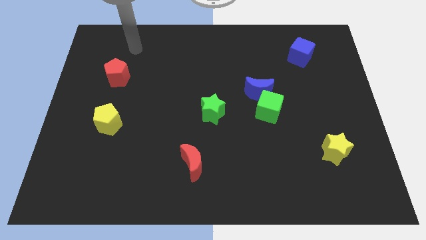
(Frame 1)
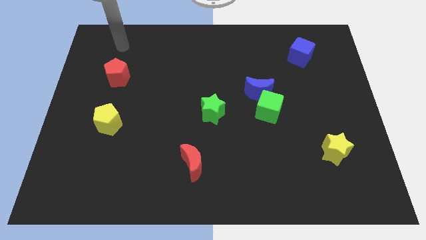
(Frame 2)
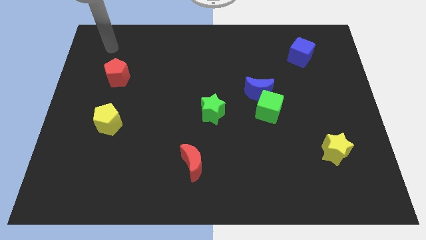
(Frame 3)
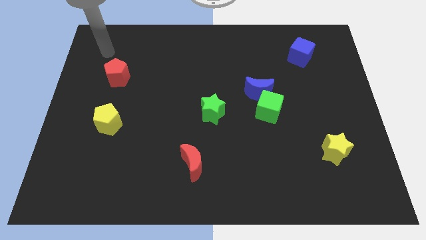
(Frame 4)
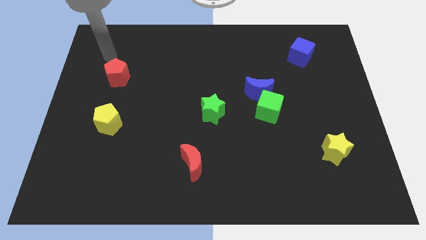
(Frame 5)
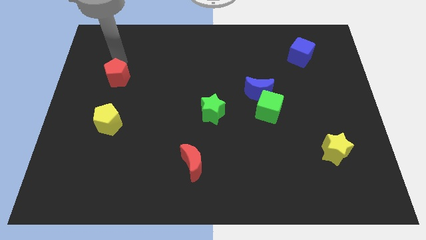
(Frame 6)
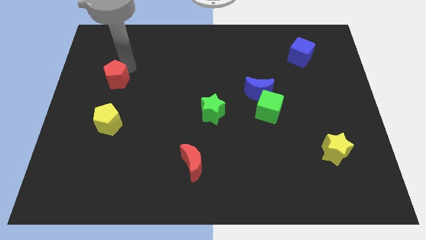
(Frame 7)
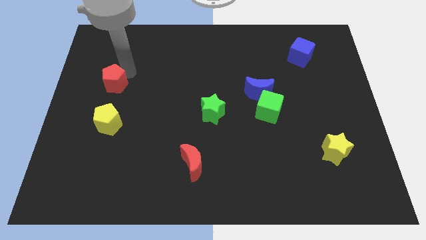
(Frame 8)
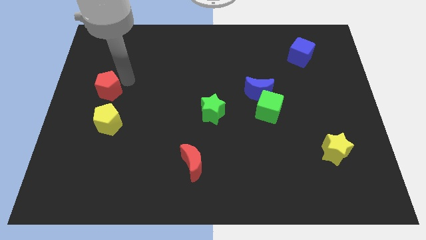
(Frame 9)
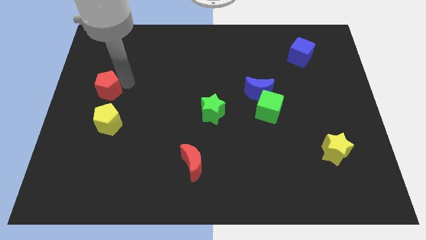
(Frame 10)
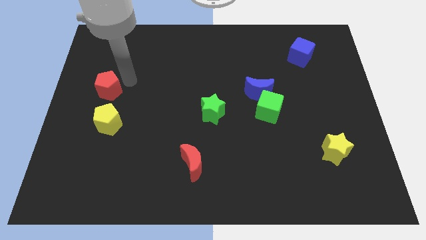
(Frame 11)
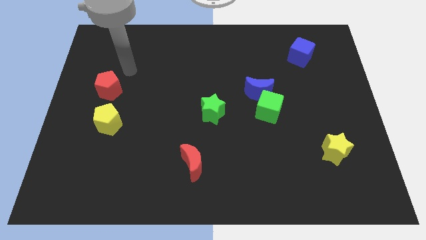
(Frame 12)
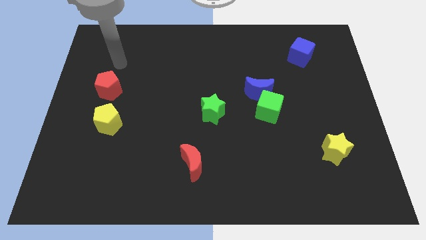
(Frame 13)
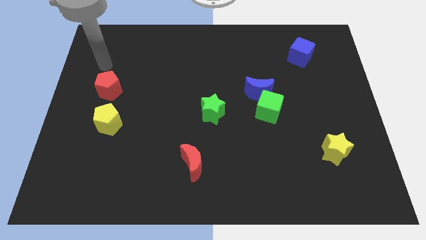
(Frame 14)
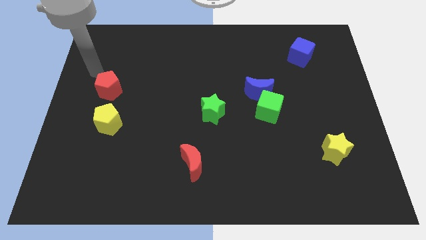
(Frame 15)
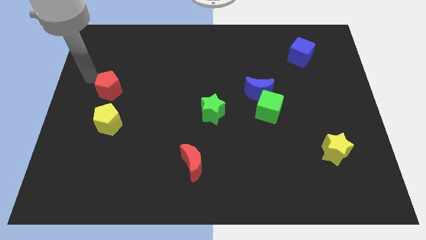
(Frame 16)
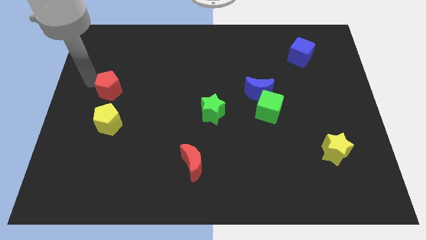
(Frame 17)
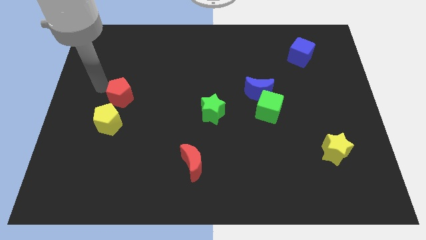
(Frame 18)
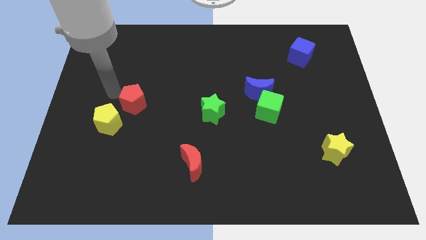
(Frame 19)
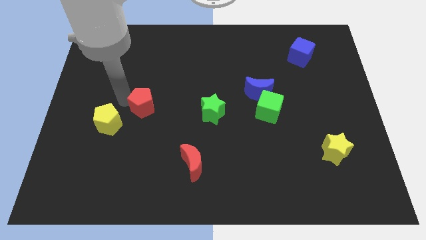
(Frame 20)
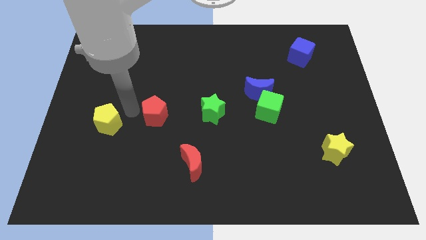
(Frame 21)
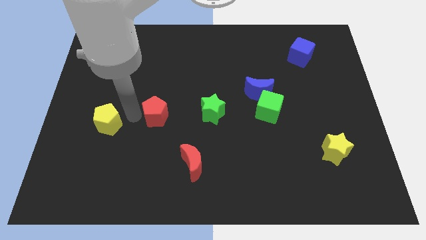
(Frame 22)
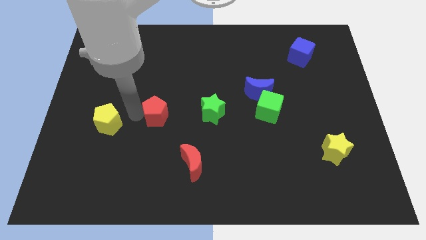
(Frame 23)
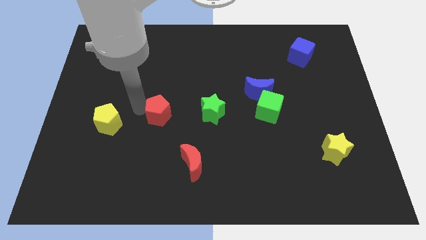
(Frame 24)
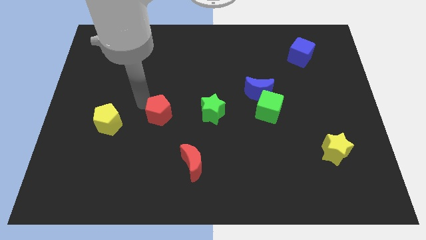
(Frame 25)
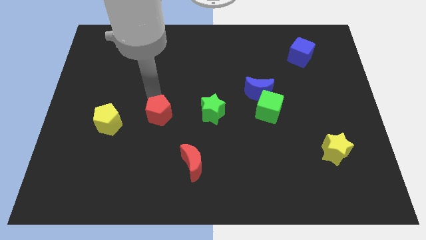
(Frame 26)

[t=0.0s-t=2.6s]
move the red pentagon to the right of the yellow pentagon

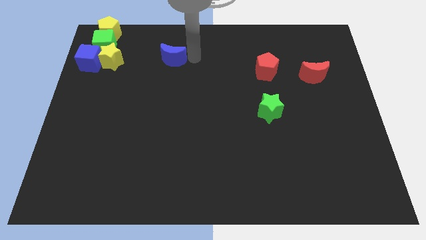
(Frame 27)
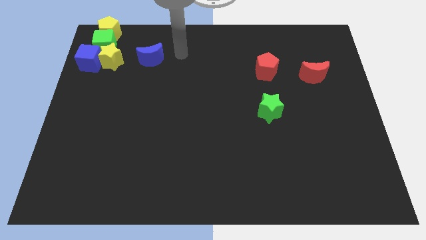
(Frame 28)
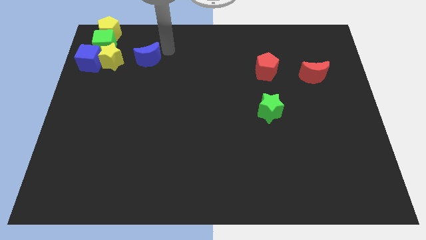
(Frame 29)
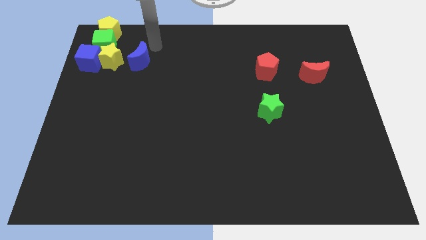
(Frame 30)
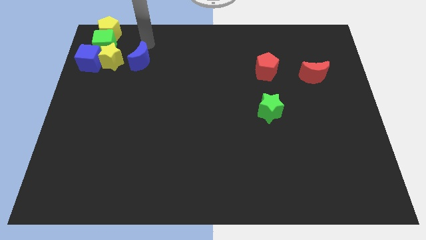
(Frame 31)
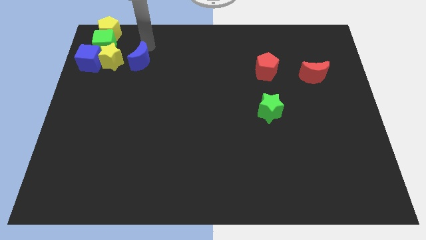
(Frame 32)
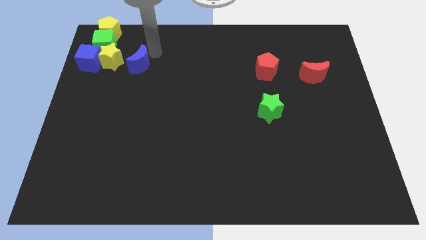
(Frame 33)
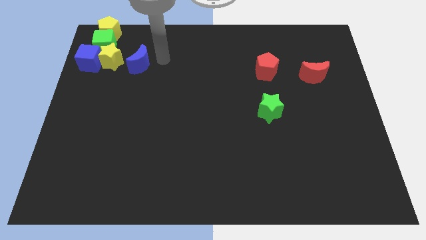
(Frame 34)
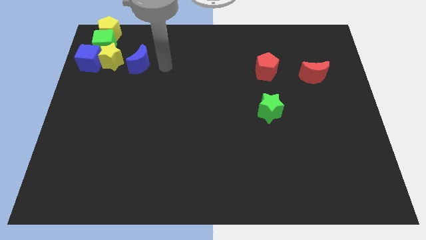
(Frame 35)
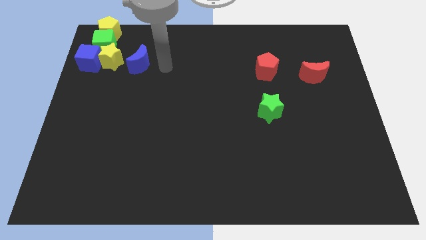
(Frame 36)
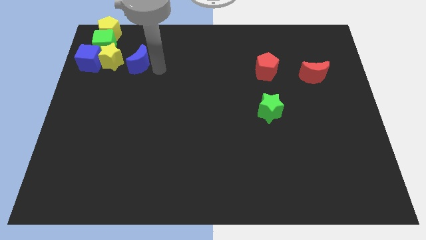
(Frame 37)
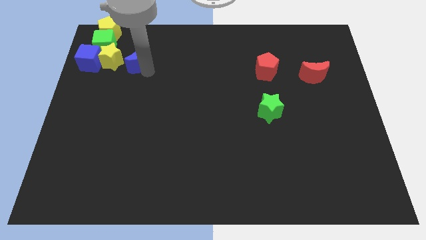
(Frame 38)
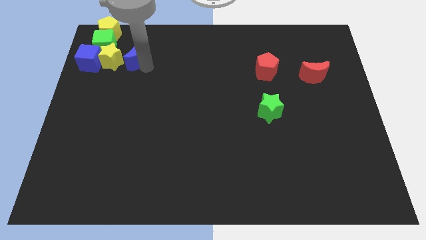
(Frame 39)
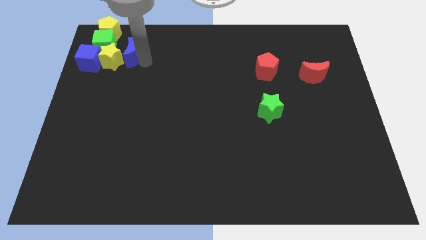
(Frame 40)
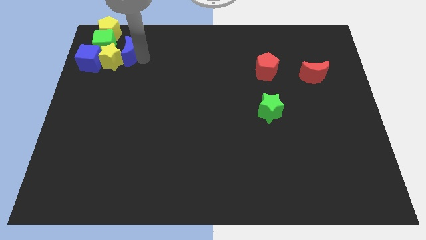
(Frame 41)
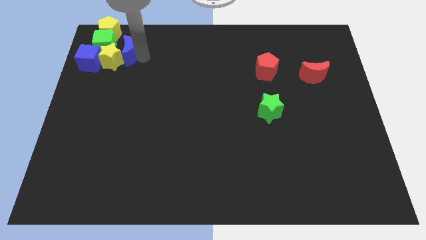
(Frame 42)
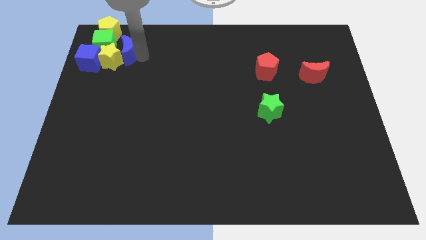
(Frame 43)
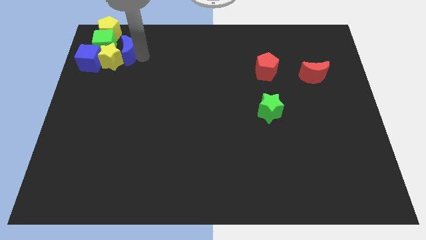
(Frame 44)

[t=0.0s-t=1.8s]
move the blue crescent towards the yellow star

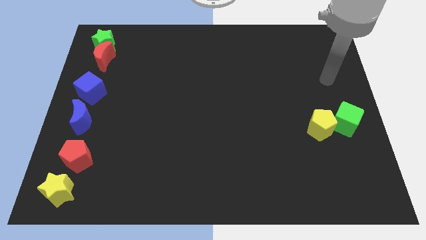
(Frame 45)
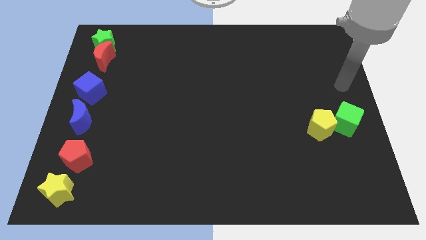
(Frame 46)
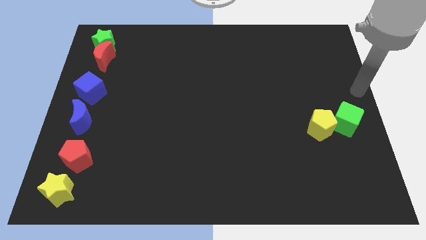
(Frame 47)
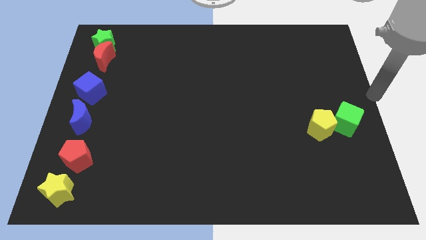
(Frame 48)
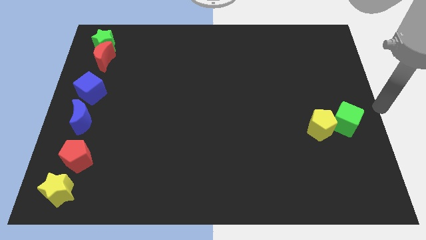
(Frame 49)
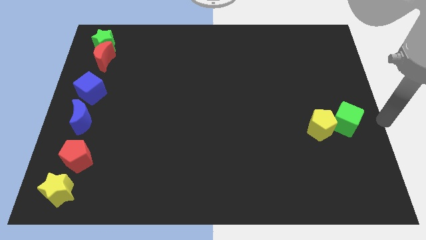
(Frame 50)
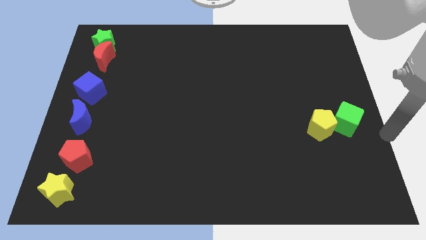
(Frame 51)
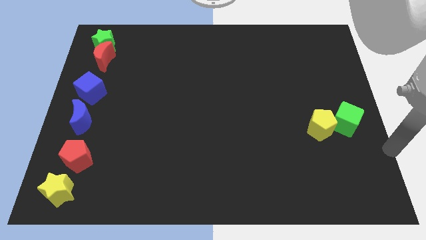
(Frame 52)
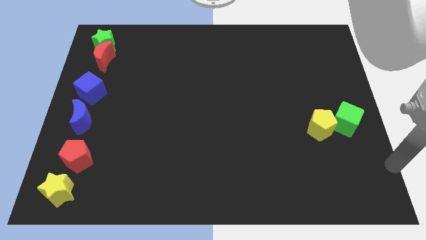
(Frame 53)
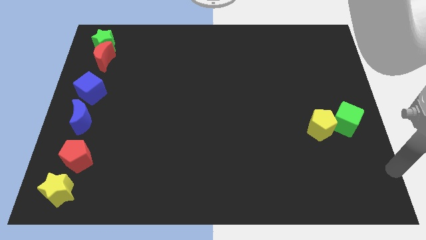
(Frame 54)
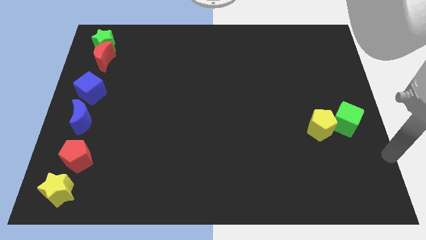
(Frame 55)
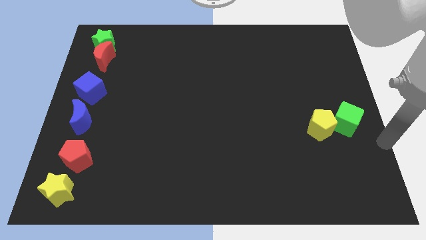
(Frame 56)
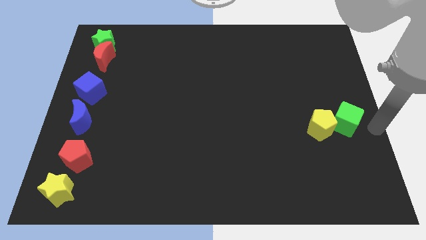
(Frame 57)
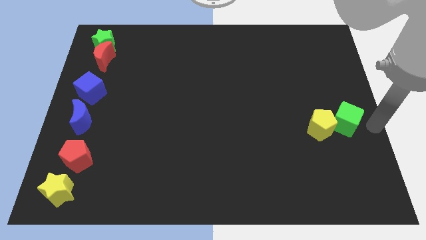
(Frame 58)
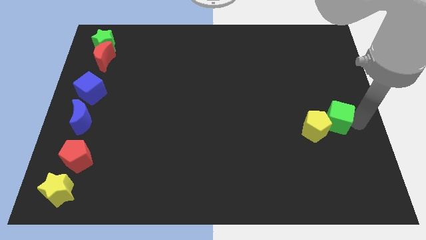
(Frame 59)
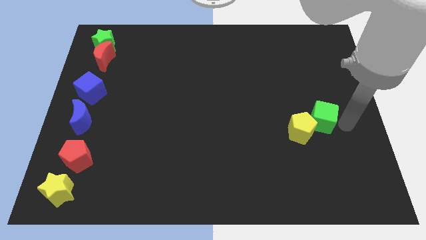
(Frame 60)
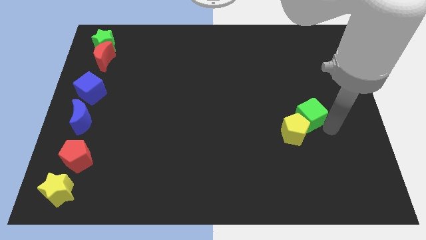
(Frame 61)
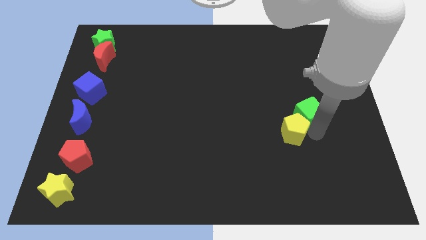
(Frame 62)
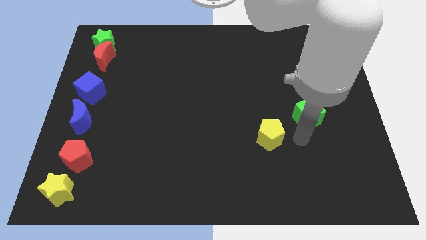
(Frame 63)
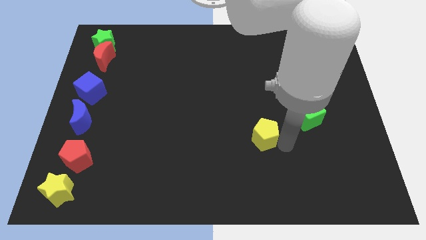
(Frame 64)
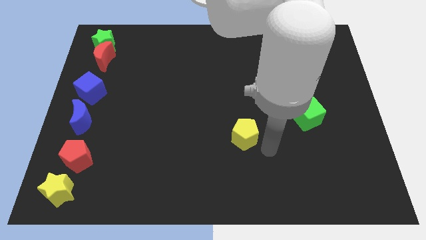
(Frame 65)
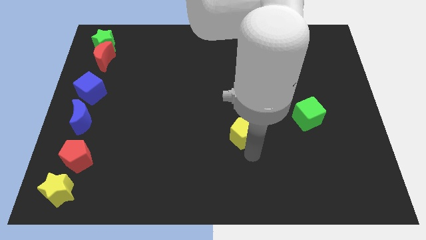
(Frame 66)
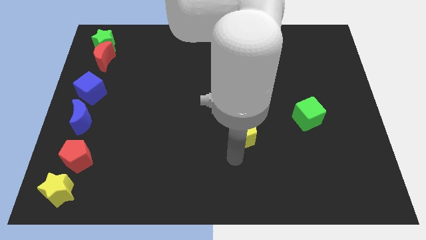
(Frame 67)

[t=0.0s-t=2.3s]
separate the yellow pentagon from the green cube

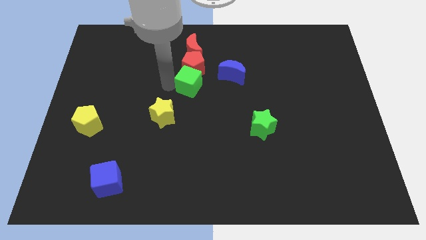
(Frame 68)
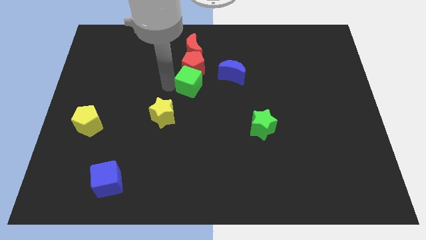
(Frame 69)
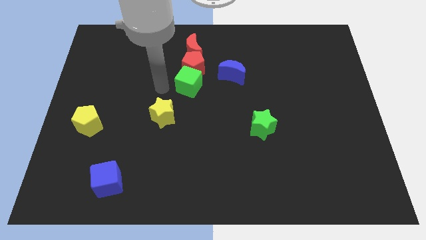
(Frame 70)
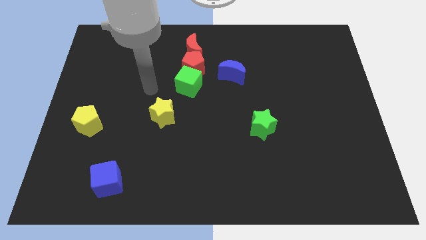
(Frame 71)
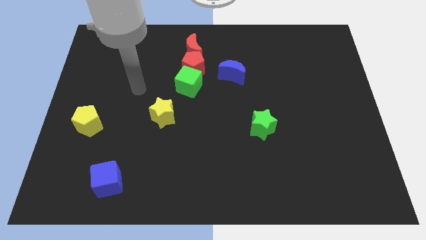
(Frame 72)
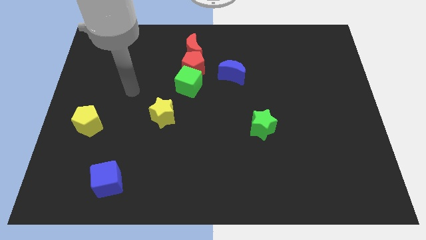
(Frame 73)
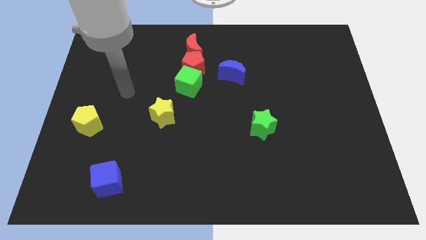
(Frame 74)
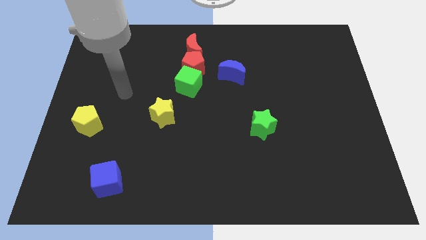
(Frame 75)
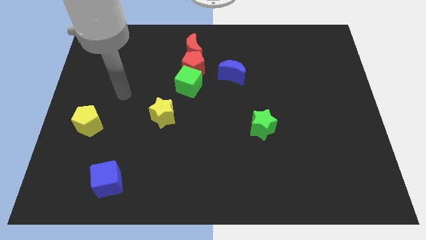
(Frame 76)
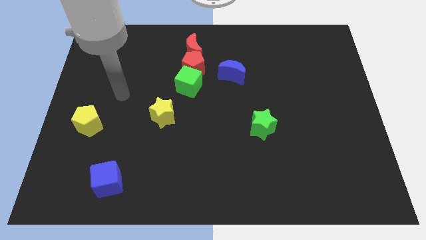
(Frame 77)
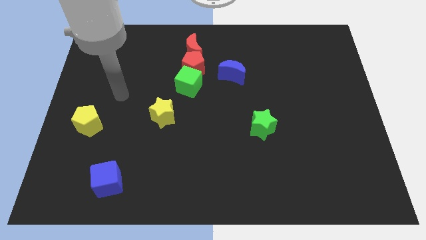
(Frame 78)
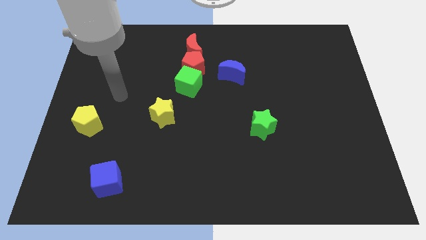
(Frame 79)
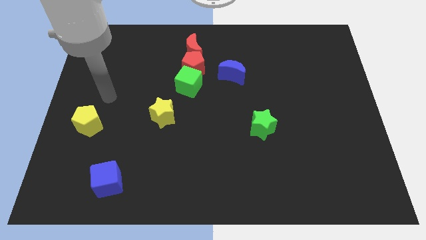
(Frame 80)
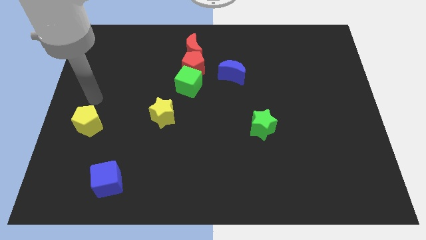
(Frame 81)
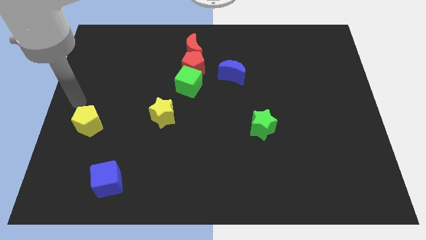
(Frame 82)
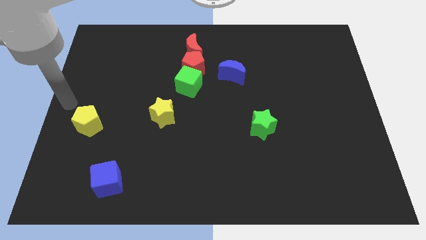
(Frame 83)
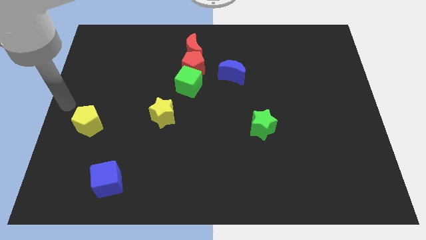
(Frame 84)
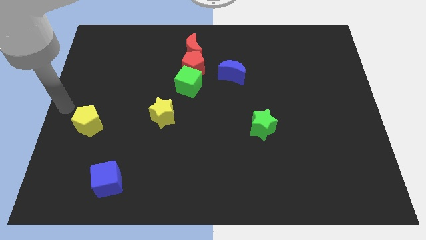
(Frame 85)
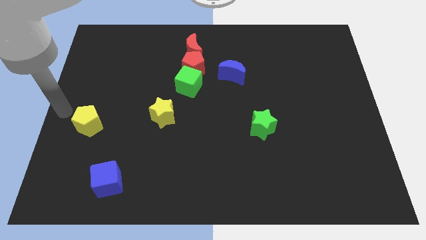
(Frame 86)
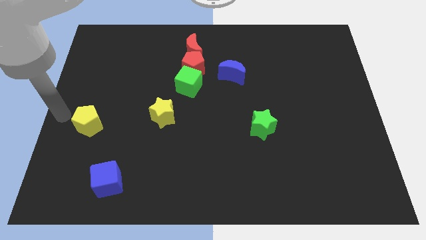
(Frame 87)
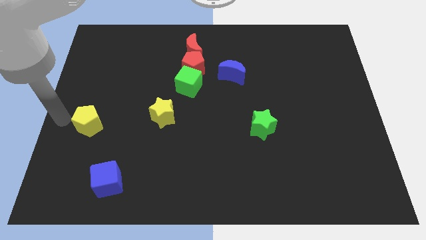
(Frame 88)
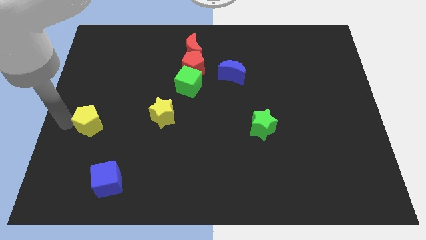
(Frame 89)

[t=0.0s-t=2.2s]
point your arm to the left of yellow pentagon

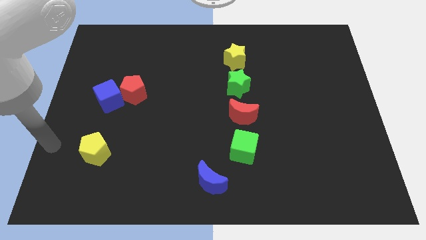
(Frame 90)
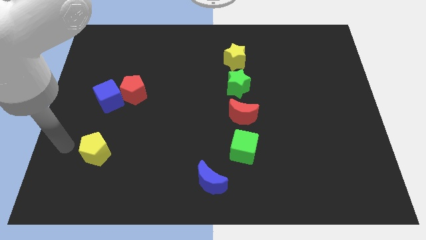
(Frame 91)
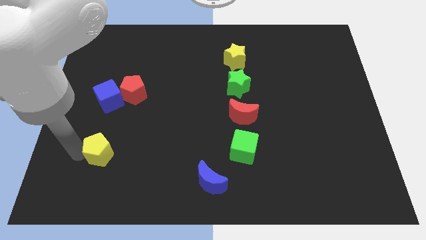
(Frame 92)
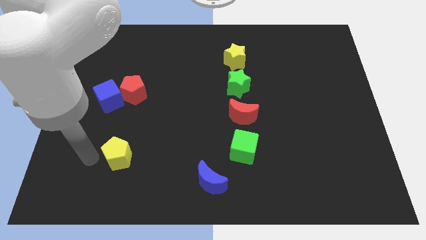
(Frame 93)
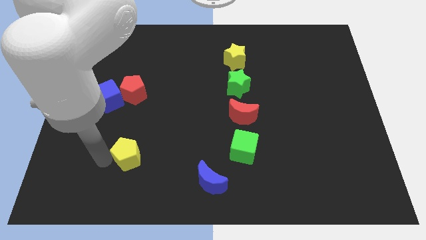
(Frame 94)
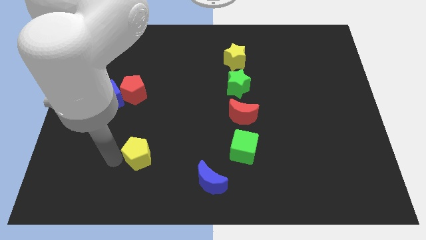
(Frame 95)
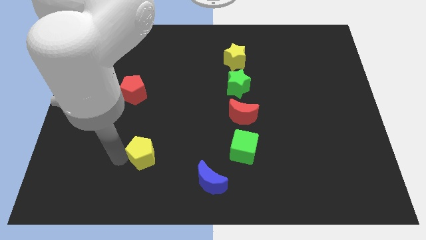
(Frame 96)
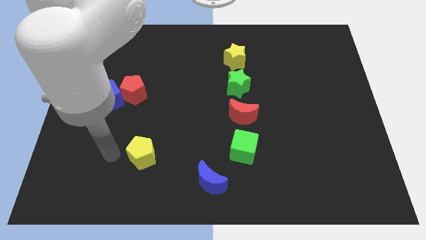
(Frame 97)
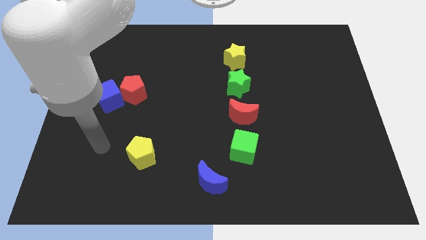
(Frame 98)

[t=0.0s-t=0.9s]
push the yellow pentagon to the right
